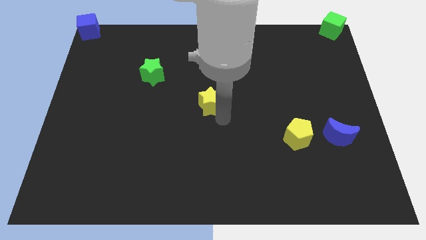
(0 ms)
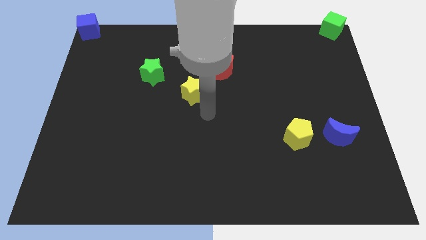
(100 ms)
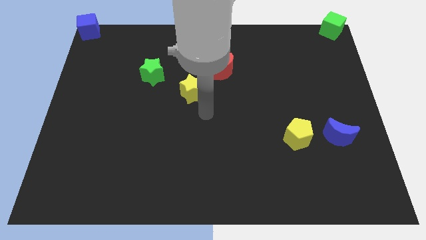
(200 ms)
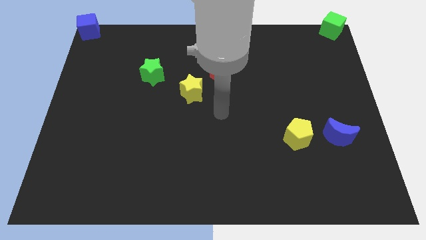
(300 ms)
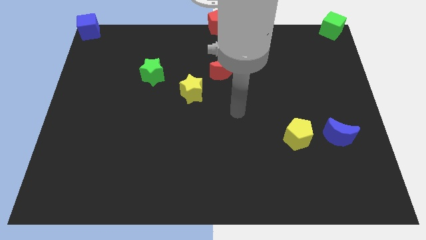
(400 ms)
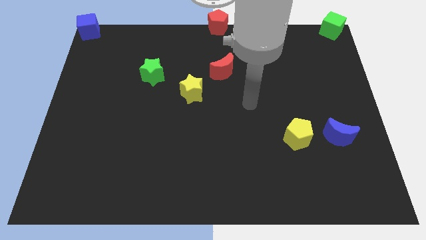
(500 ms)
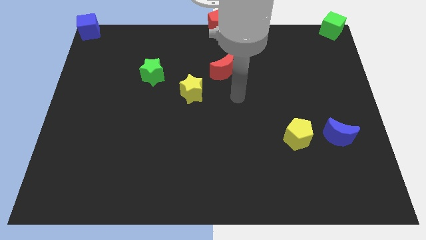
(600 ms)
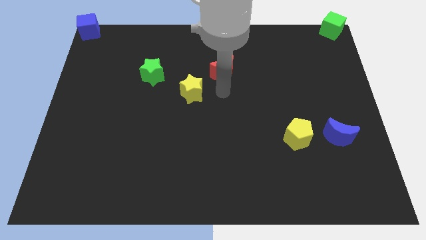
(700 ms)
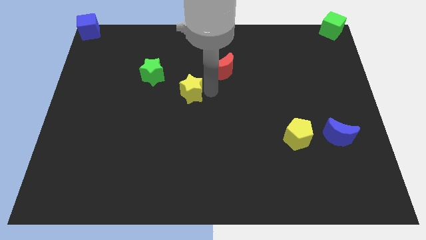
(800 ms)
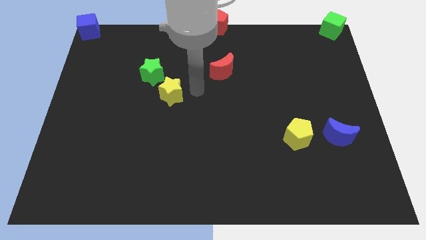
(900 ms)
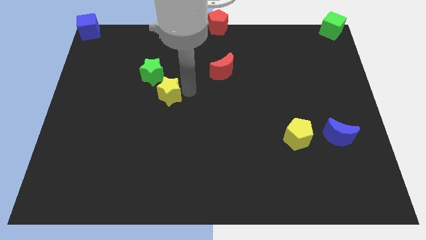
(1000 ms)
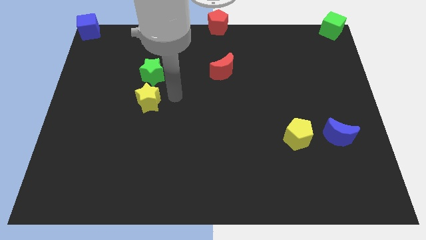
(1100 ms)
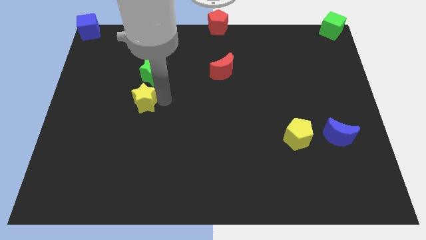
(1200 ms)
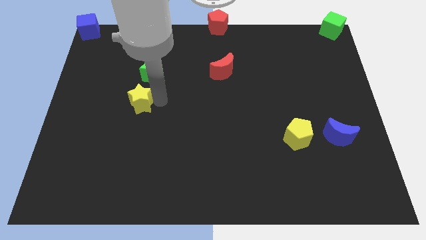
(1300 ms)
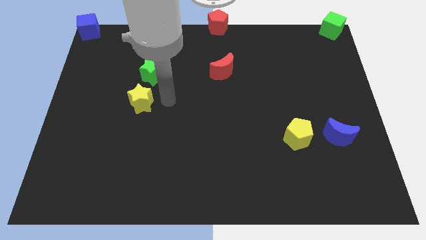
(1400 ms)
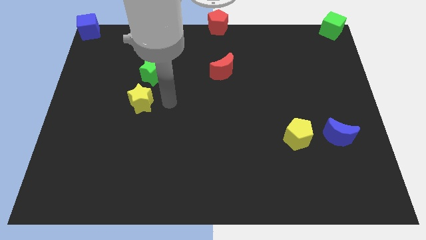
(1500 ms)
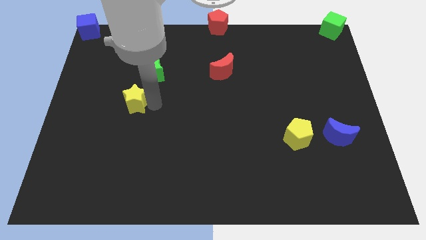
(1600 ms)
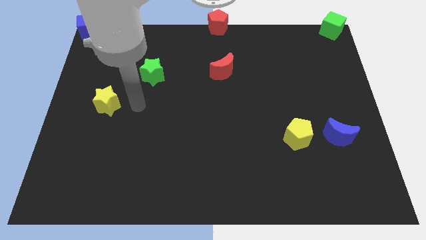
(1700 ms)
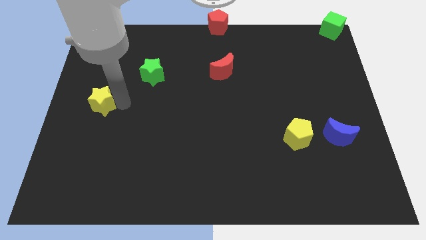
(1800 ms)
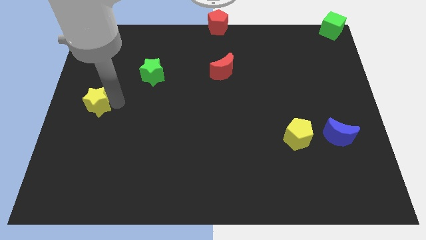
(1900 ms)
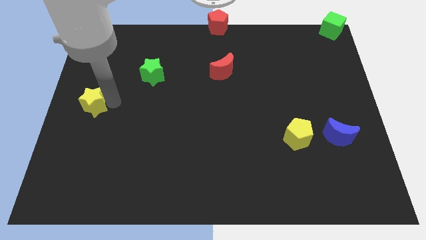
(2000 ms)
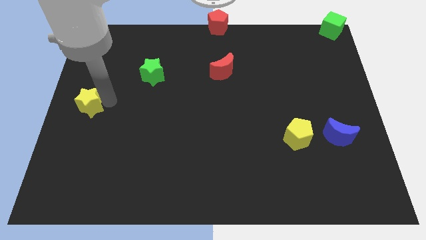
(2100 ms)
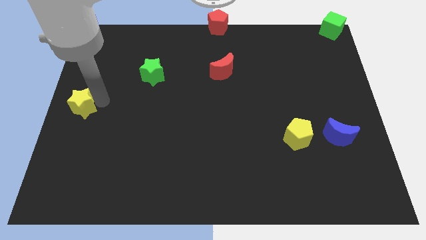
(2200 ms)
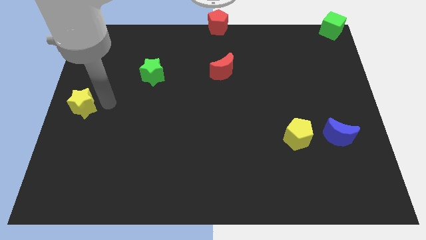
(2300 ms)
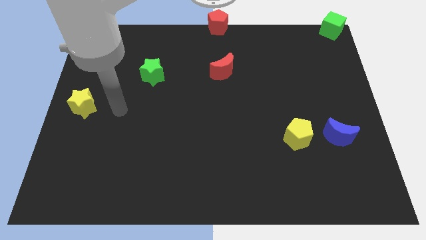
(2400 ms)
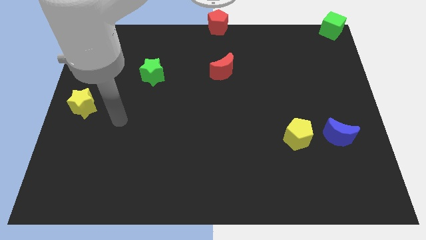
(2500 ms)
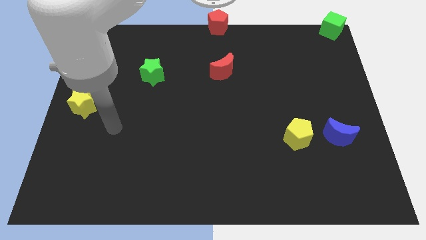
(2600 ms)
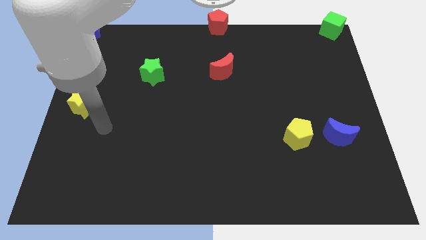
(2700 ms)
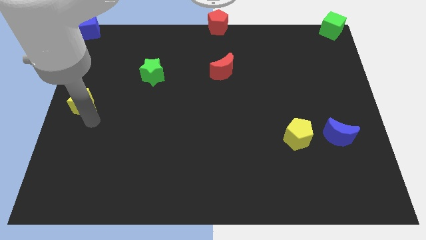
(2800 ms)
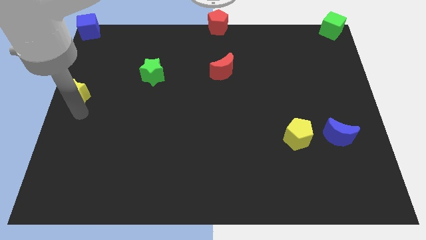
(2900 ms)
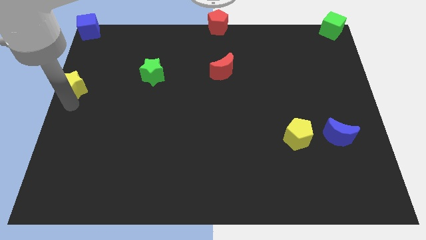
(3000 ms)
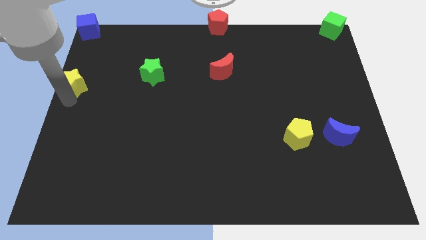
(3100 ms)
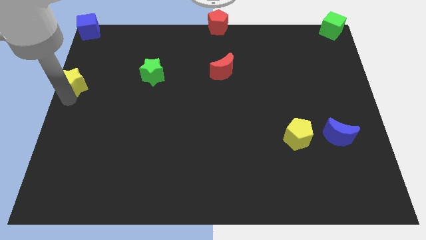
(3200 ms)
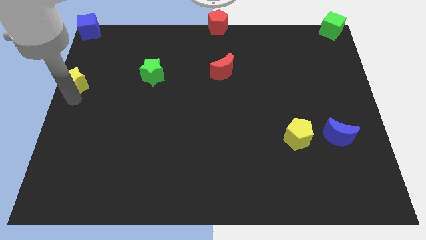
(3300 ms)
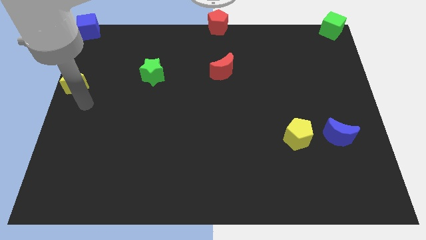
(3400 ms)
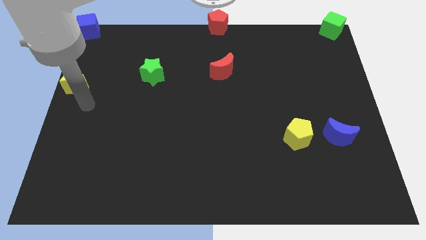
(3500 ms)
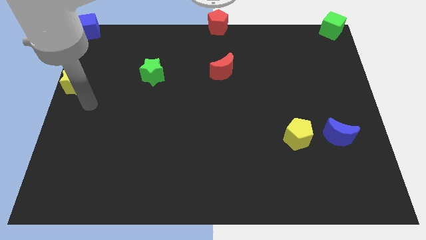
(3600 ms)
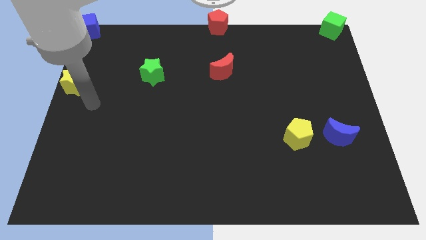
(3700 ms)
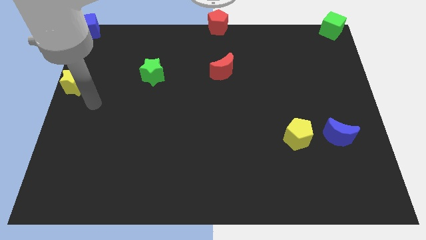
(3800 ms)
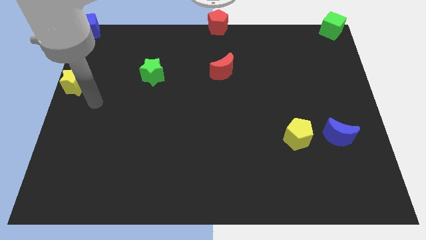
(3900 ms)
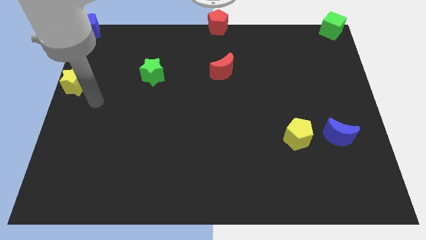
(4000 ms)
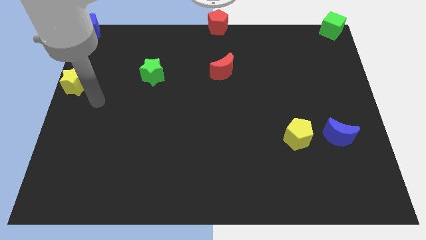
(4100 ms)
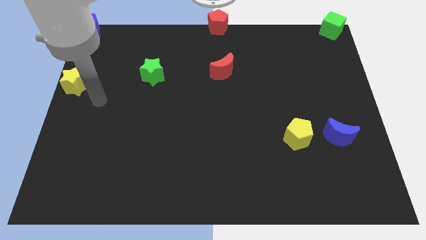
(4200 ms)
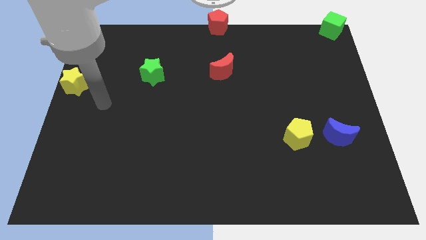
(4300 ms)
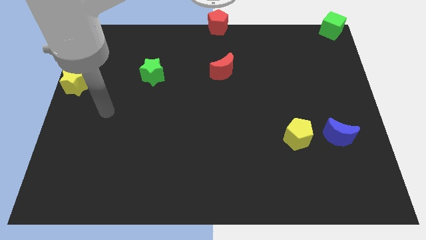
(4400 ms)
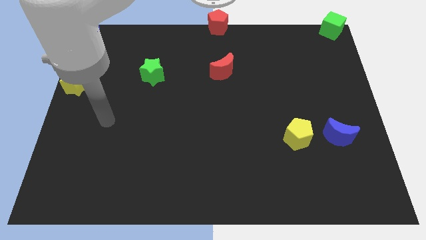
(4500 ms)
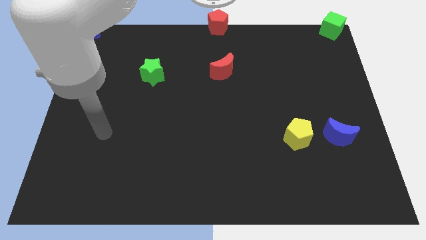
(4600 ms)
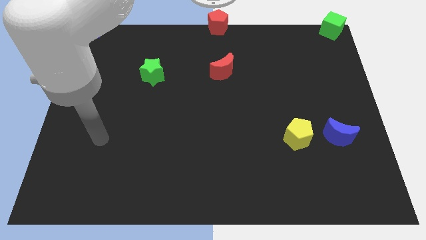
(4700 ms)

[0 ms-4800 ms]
move the yellow star on the left side of the board

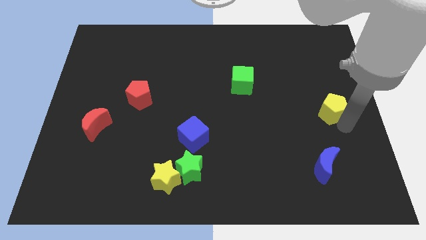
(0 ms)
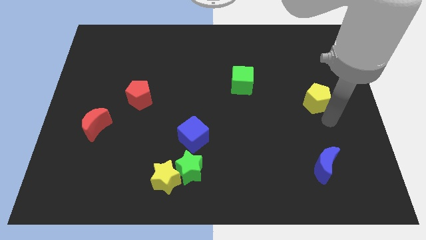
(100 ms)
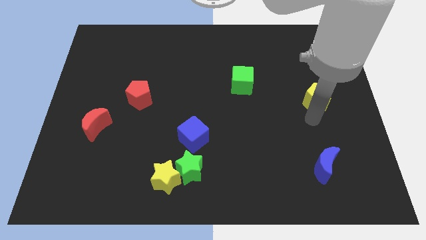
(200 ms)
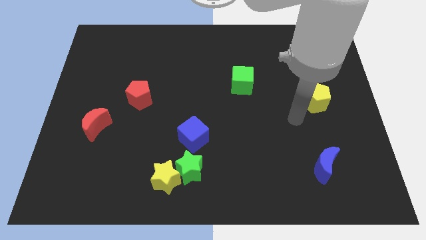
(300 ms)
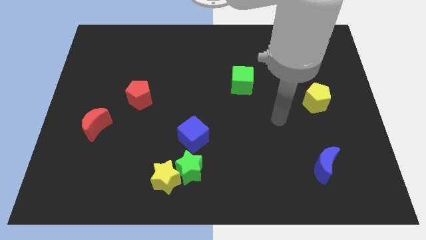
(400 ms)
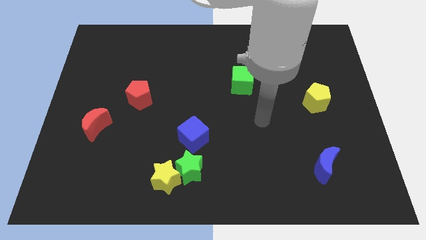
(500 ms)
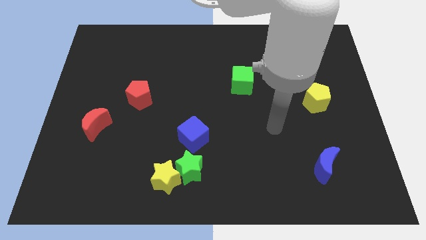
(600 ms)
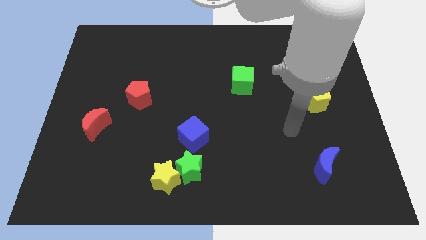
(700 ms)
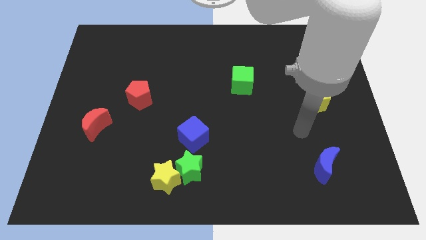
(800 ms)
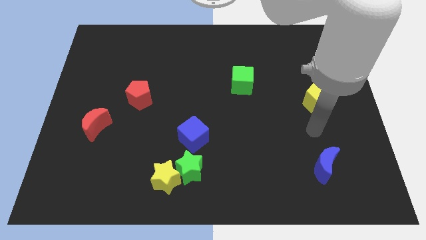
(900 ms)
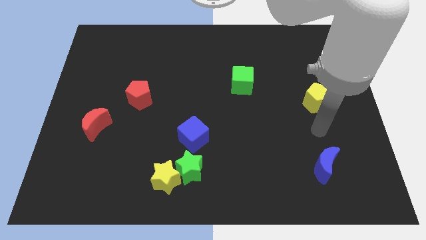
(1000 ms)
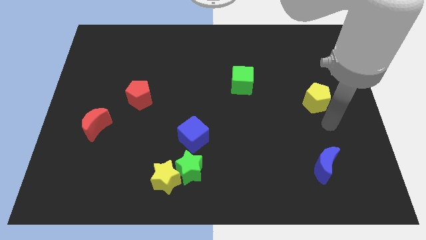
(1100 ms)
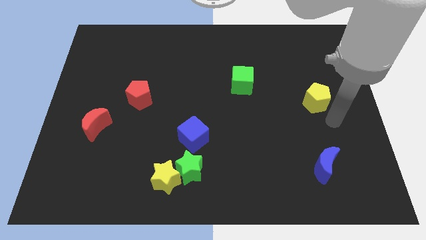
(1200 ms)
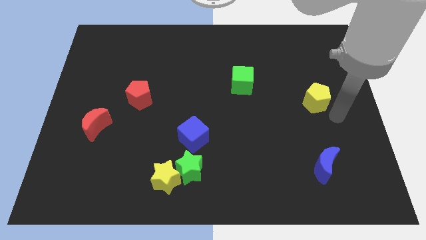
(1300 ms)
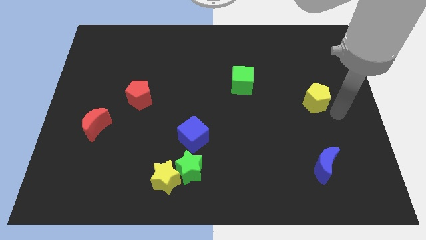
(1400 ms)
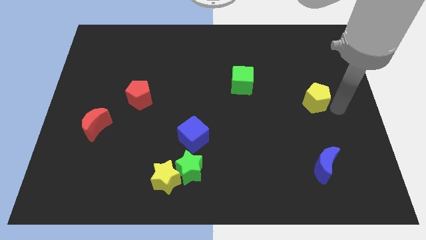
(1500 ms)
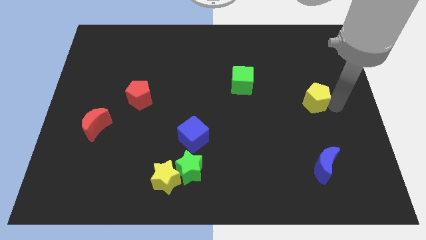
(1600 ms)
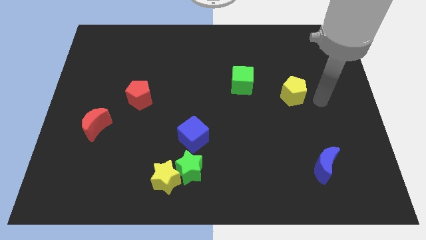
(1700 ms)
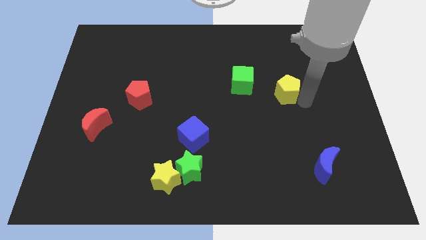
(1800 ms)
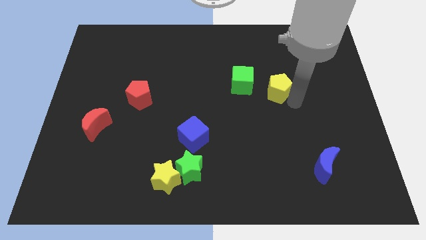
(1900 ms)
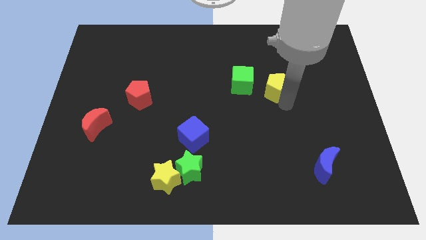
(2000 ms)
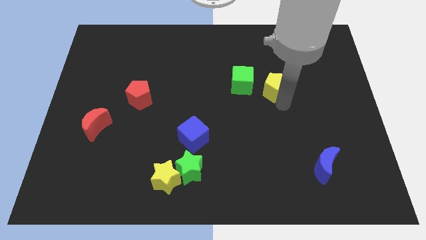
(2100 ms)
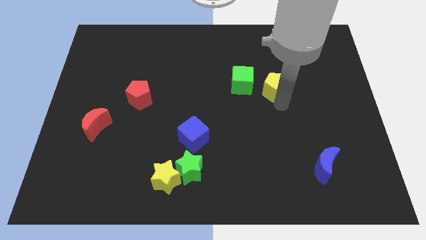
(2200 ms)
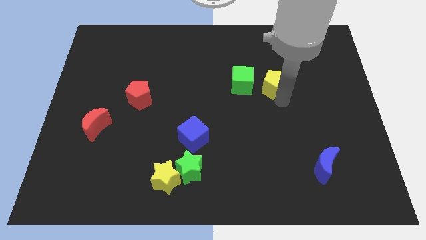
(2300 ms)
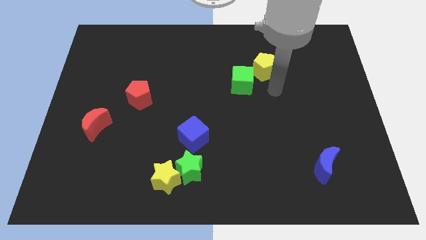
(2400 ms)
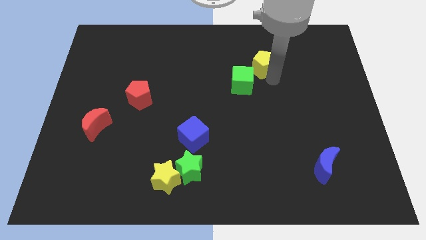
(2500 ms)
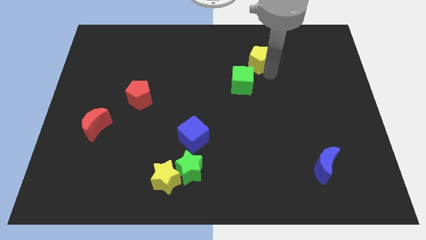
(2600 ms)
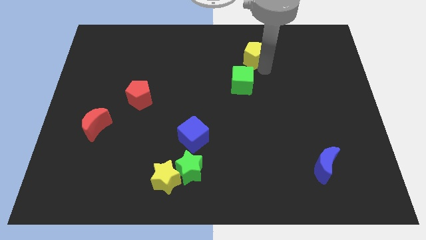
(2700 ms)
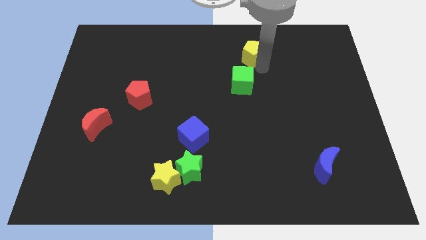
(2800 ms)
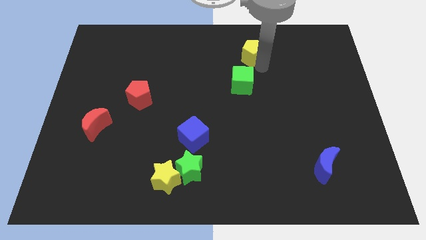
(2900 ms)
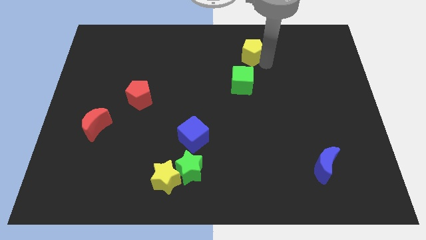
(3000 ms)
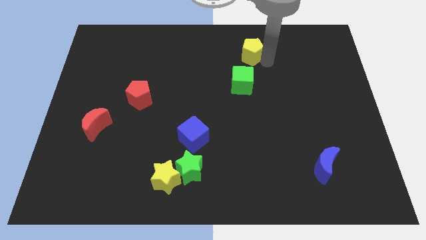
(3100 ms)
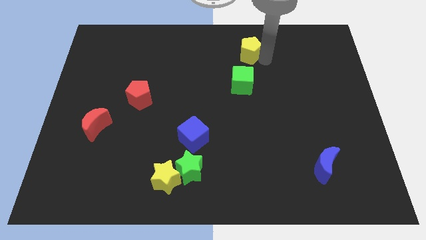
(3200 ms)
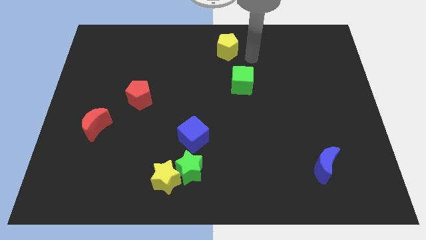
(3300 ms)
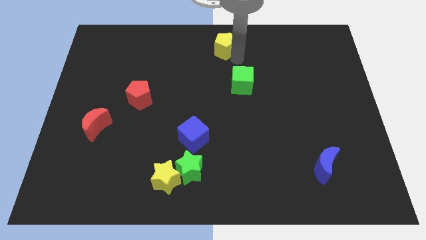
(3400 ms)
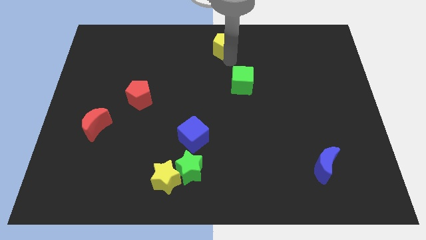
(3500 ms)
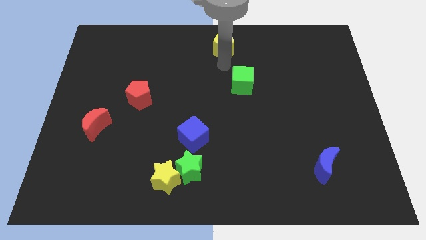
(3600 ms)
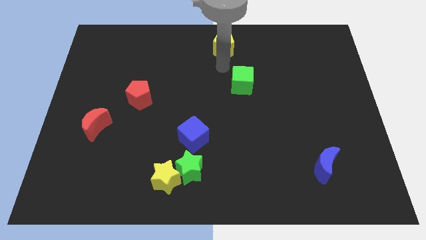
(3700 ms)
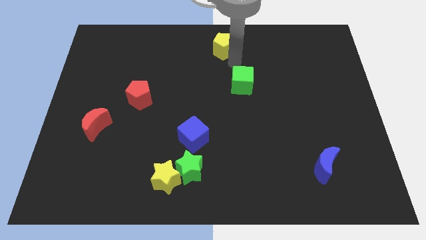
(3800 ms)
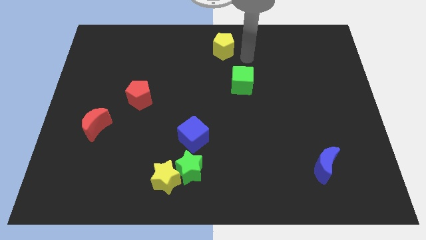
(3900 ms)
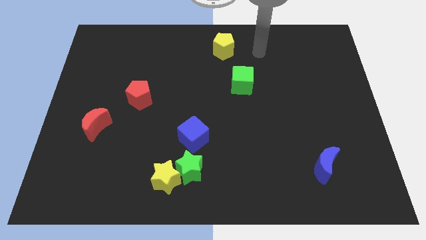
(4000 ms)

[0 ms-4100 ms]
push the yellow pentagon towards top center of the board
